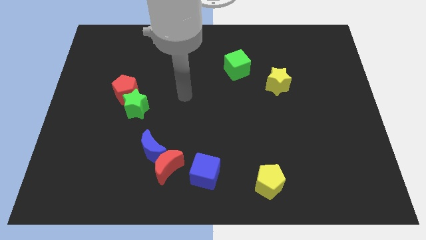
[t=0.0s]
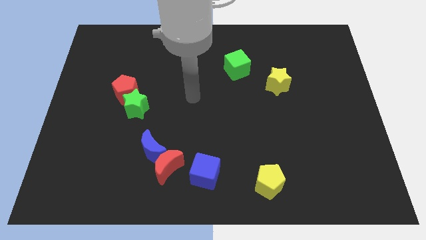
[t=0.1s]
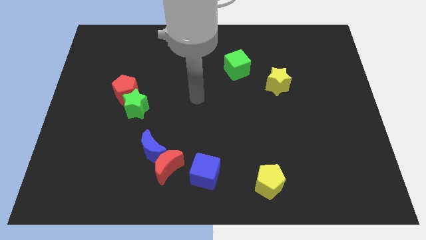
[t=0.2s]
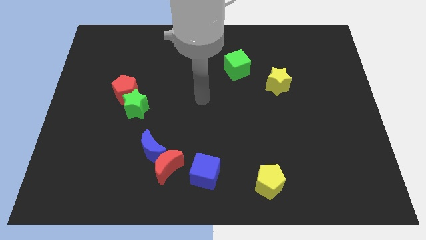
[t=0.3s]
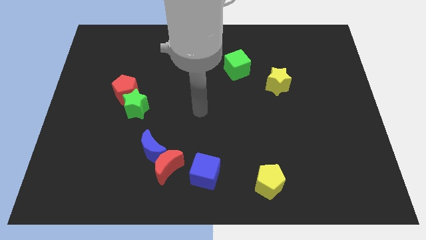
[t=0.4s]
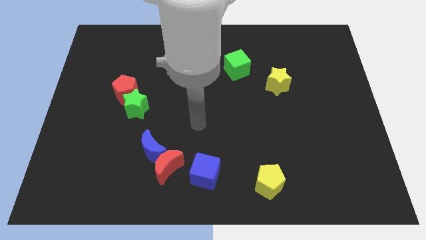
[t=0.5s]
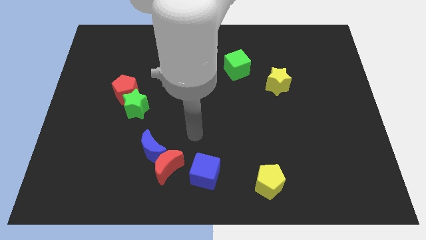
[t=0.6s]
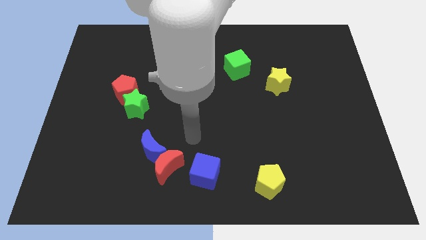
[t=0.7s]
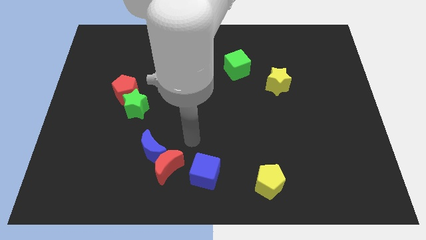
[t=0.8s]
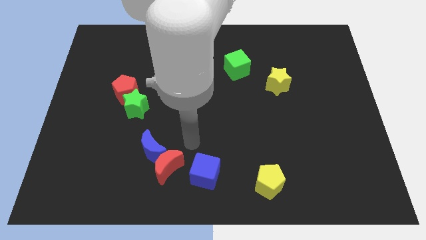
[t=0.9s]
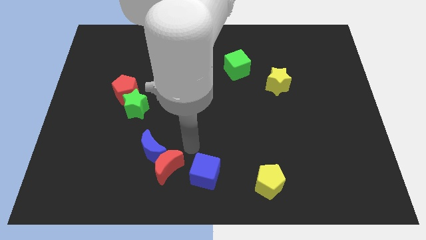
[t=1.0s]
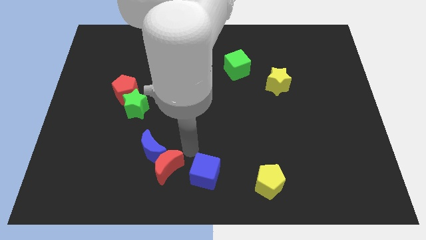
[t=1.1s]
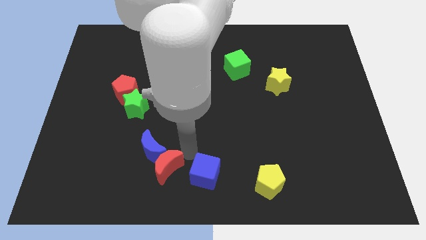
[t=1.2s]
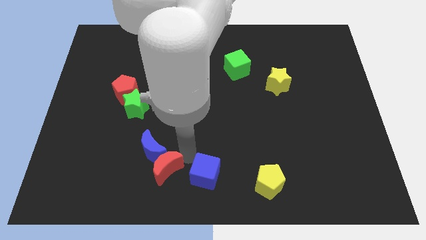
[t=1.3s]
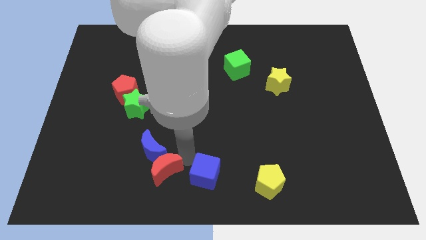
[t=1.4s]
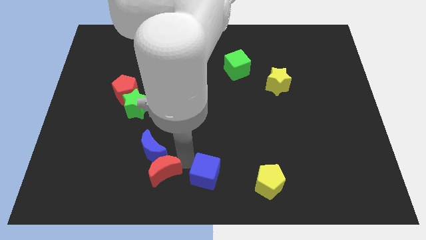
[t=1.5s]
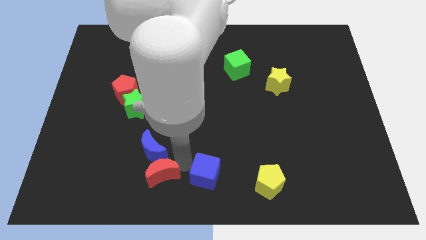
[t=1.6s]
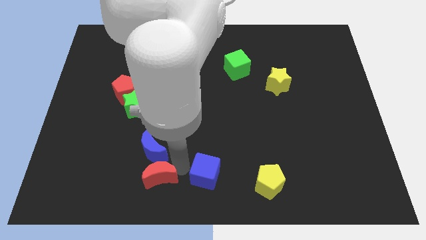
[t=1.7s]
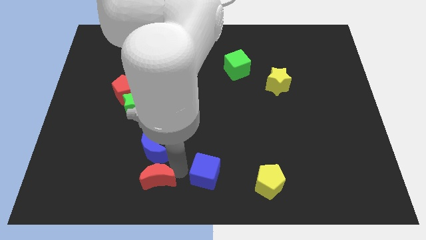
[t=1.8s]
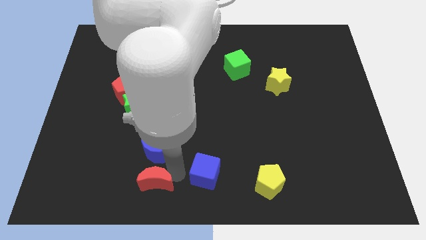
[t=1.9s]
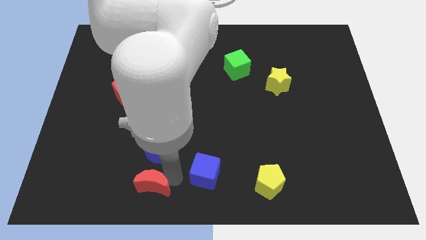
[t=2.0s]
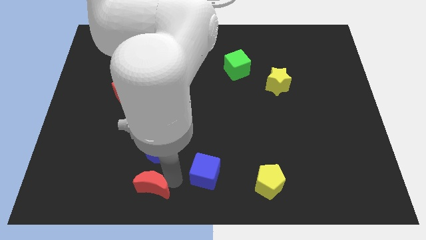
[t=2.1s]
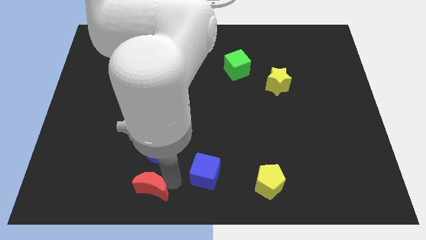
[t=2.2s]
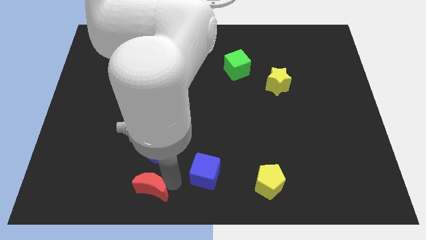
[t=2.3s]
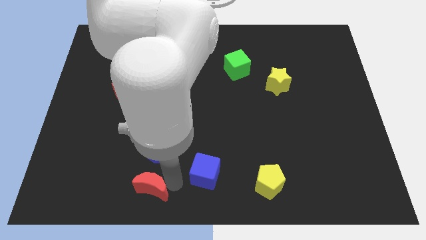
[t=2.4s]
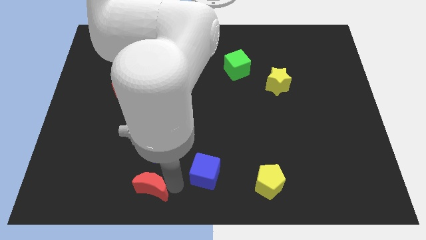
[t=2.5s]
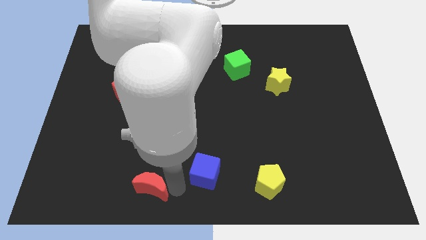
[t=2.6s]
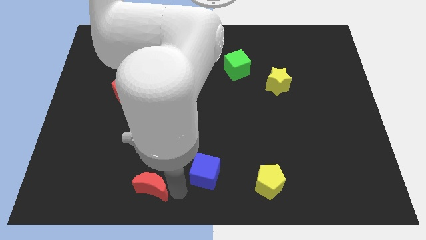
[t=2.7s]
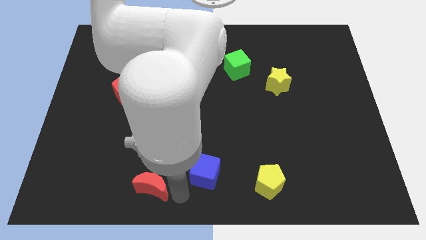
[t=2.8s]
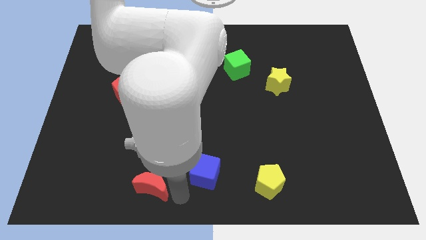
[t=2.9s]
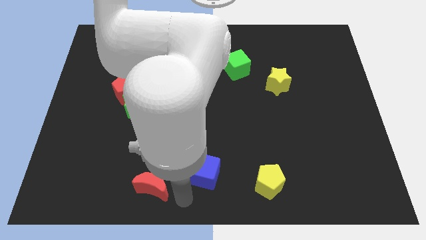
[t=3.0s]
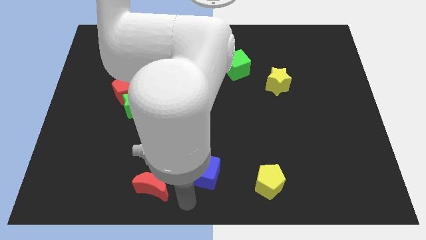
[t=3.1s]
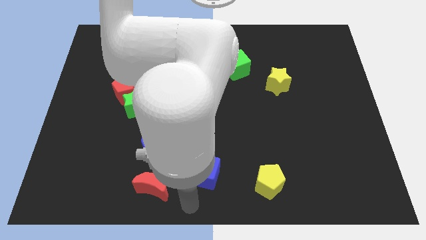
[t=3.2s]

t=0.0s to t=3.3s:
go and separate the red crescent from the blue crescent

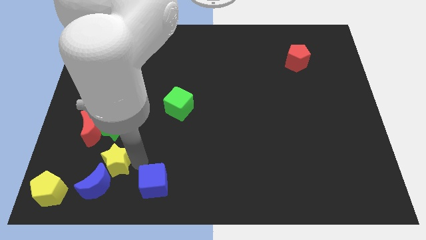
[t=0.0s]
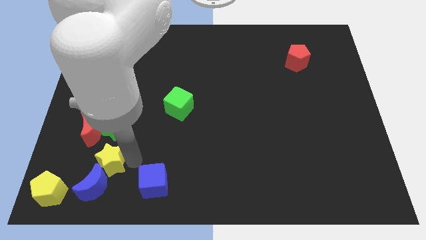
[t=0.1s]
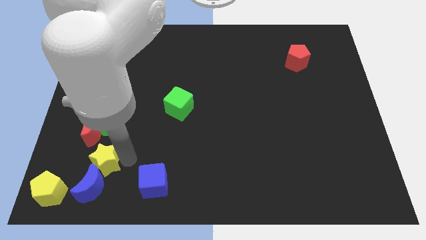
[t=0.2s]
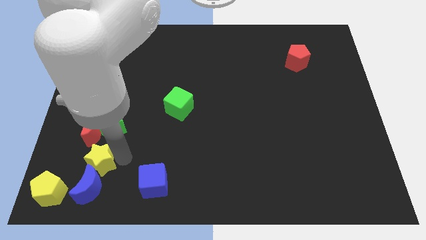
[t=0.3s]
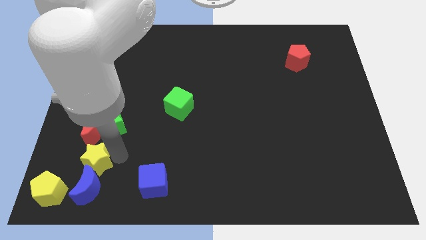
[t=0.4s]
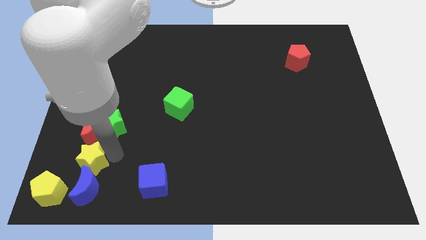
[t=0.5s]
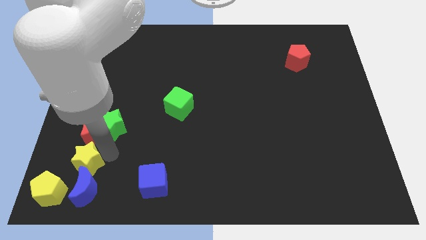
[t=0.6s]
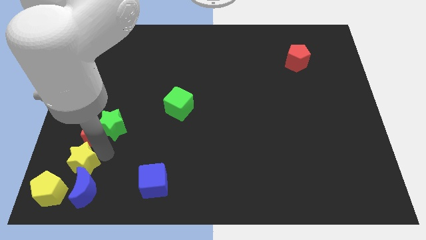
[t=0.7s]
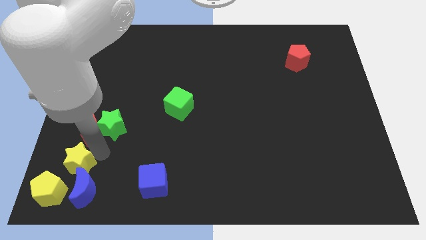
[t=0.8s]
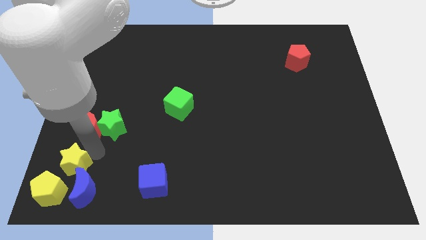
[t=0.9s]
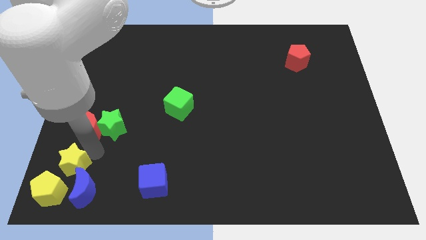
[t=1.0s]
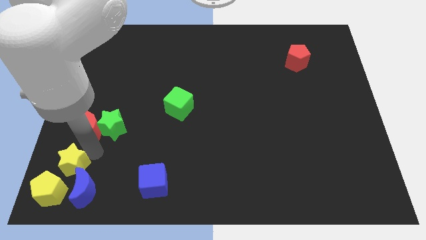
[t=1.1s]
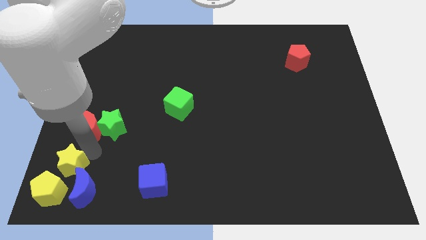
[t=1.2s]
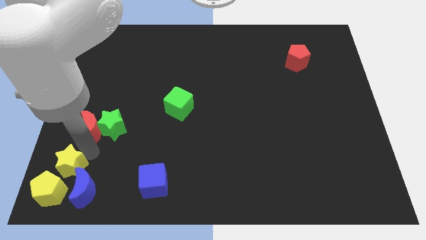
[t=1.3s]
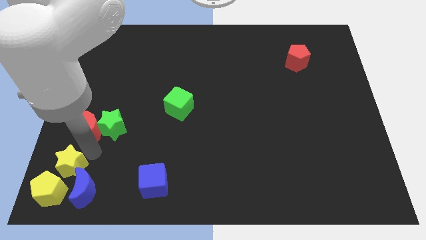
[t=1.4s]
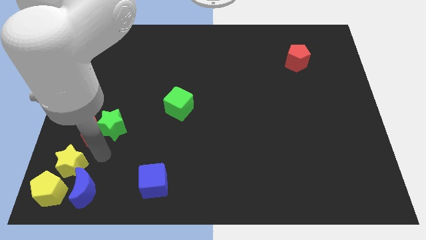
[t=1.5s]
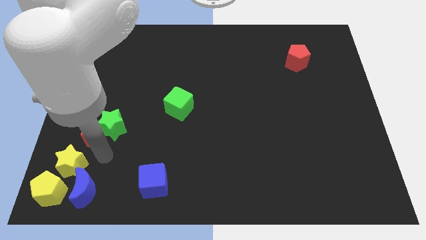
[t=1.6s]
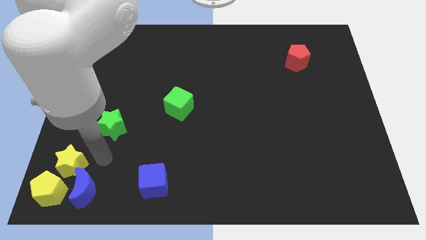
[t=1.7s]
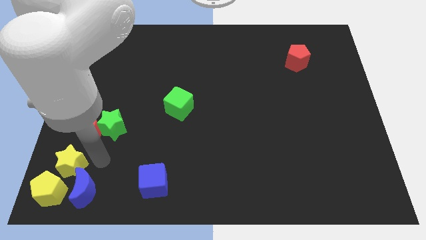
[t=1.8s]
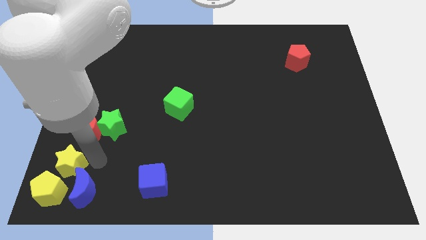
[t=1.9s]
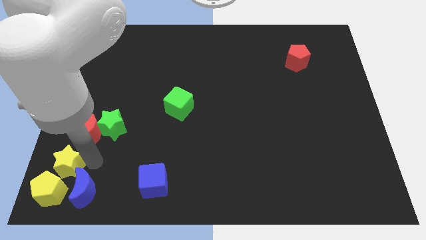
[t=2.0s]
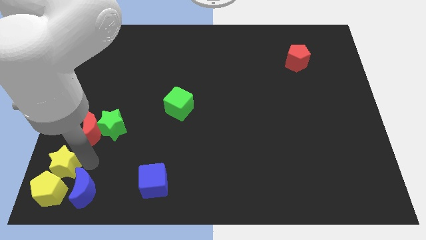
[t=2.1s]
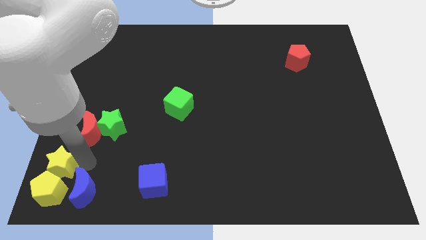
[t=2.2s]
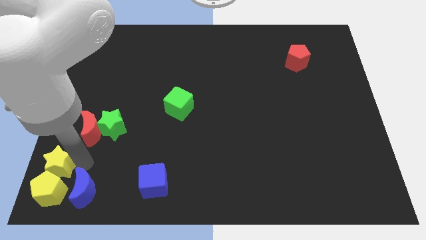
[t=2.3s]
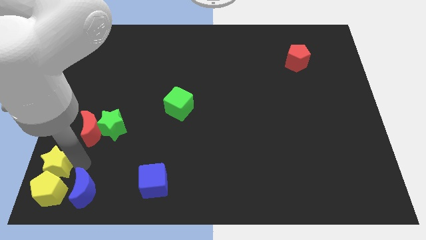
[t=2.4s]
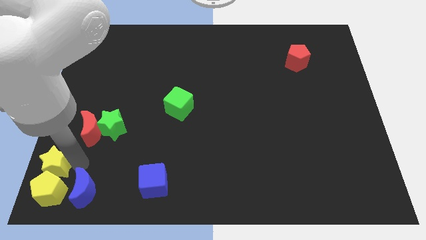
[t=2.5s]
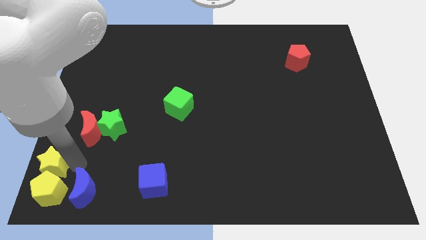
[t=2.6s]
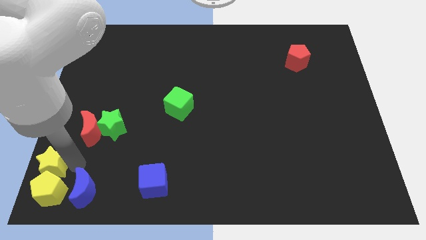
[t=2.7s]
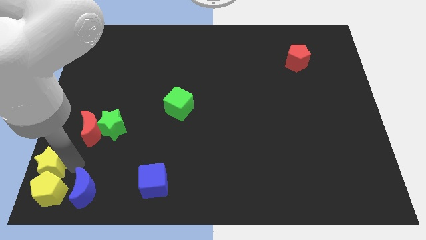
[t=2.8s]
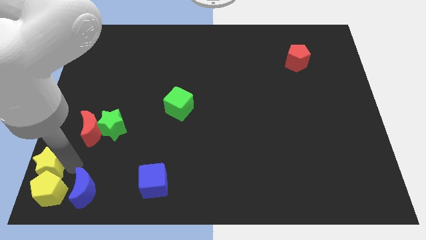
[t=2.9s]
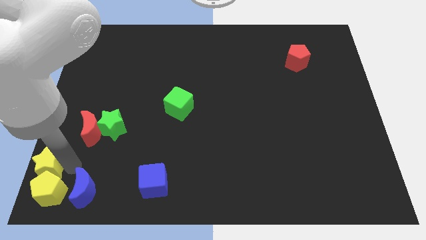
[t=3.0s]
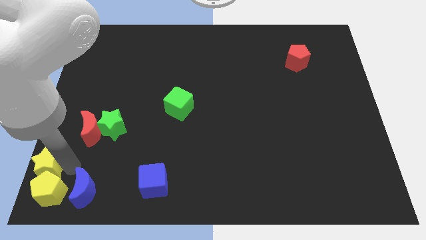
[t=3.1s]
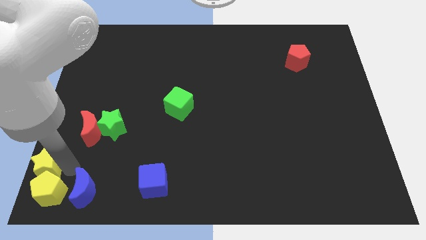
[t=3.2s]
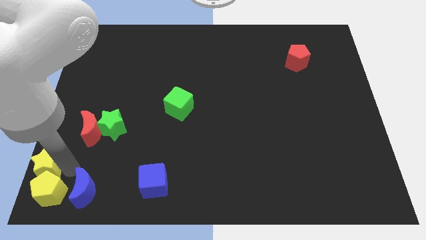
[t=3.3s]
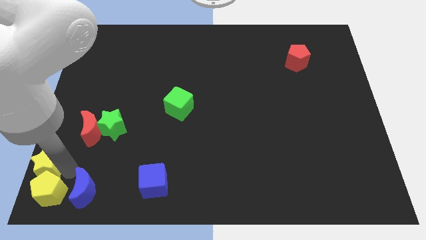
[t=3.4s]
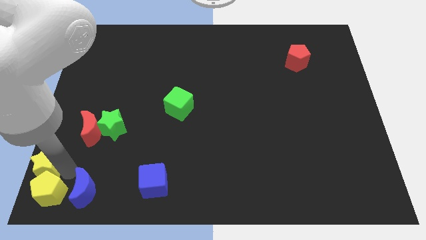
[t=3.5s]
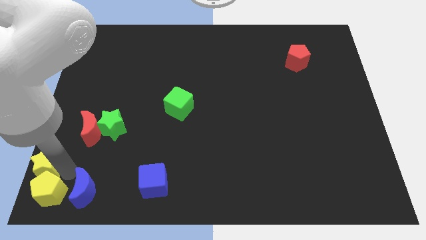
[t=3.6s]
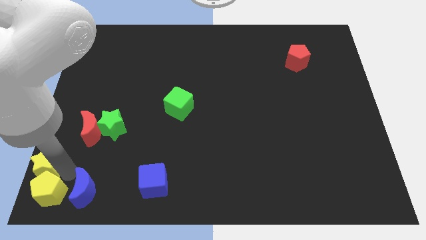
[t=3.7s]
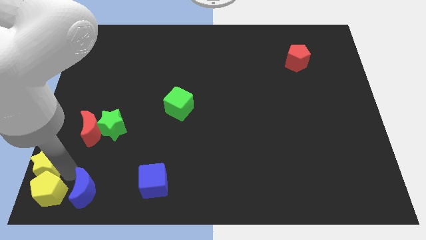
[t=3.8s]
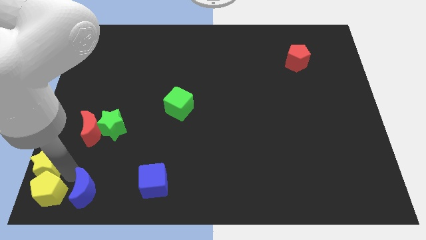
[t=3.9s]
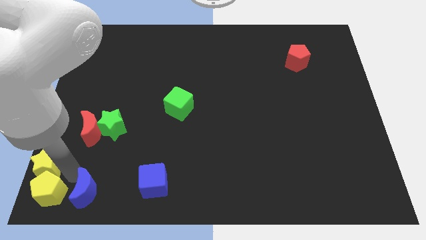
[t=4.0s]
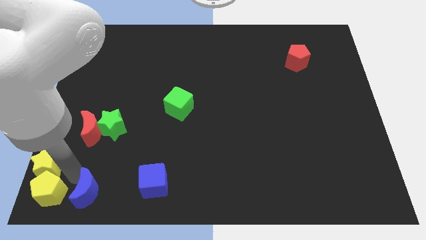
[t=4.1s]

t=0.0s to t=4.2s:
place the yellow star top of the yellow pentagon

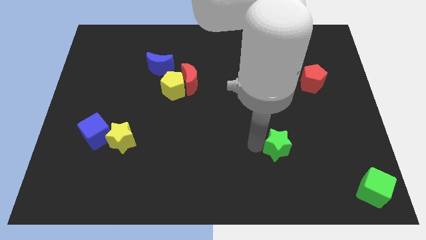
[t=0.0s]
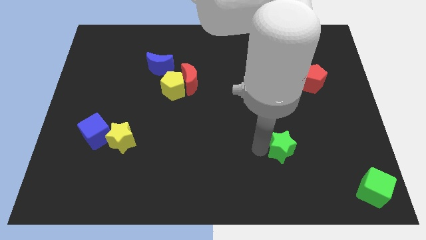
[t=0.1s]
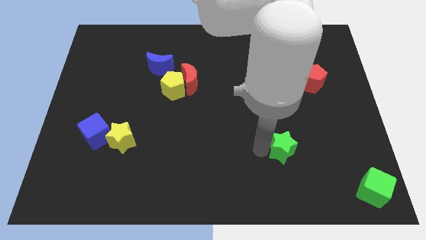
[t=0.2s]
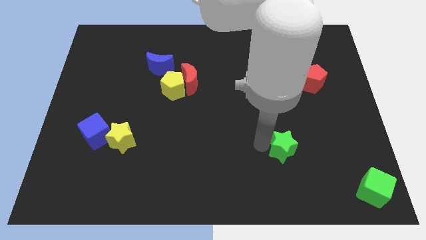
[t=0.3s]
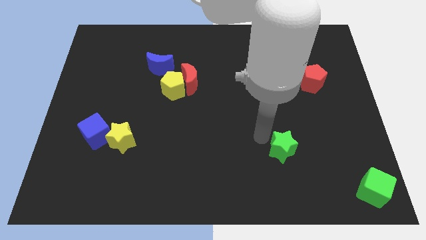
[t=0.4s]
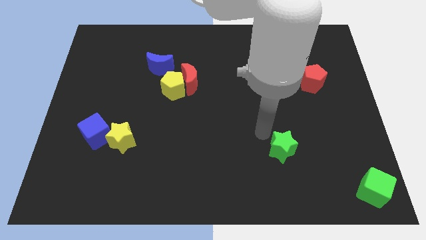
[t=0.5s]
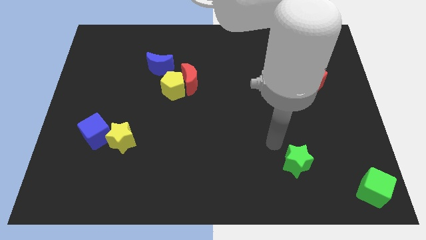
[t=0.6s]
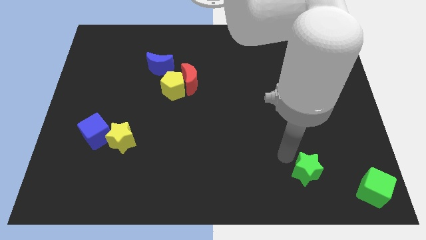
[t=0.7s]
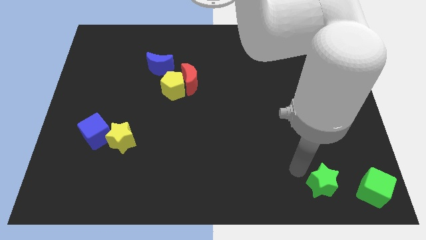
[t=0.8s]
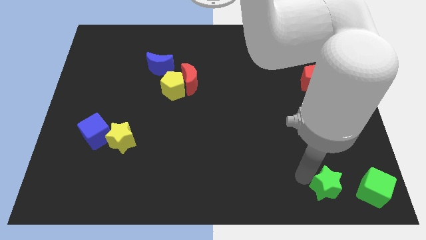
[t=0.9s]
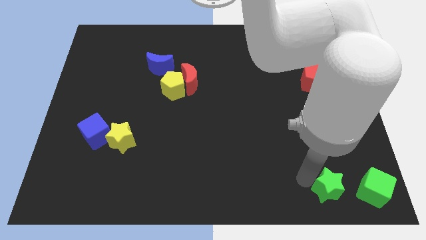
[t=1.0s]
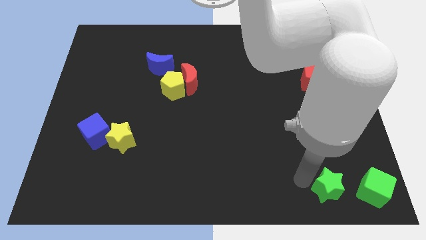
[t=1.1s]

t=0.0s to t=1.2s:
move the green star left to the green cube

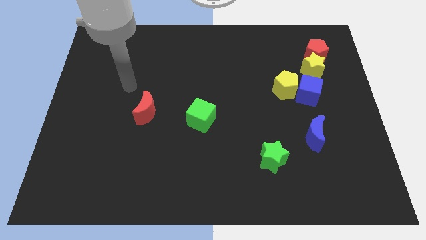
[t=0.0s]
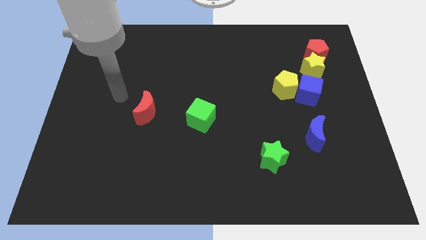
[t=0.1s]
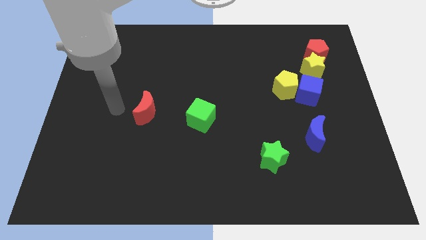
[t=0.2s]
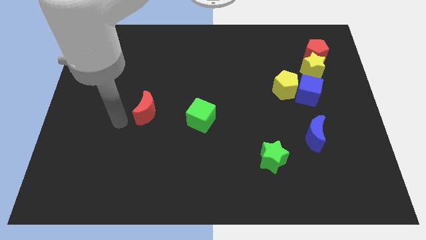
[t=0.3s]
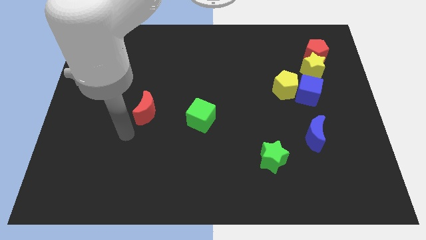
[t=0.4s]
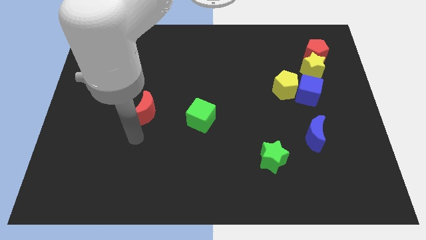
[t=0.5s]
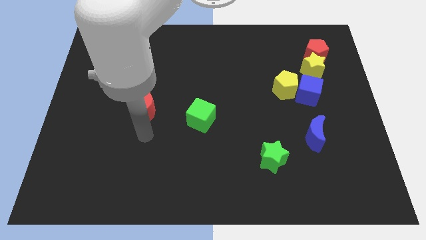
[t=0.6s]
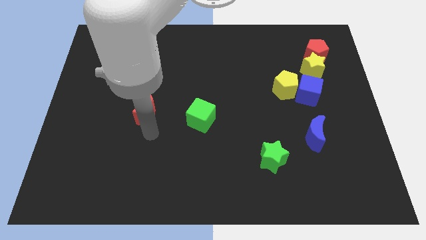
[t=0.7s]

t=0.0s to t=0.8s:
place the arm below the red crescent
